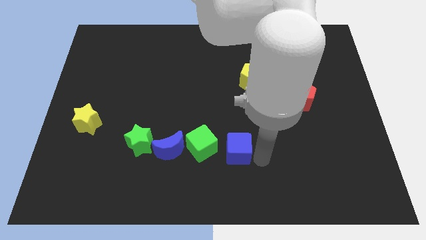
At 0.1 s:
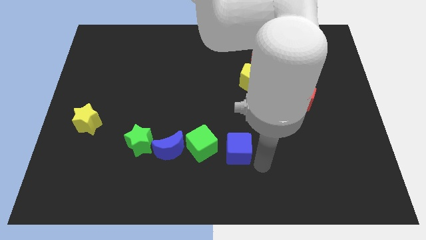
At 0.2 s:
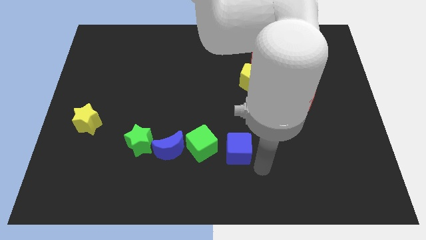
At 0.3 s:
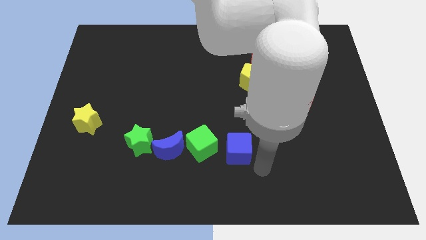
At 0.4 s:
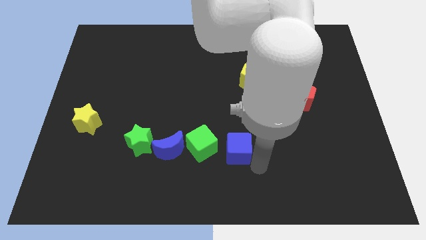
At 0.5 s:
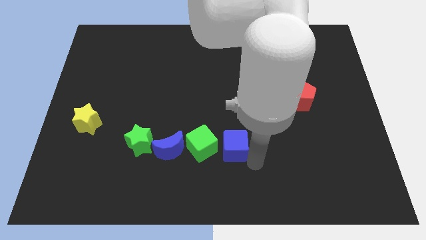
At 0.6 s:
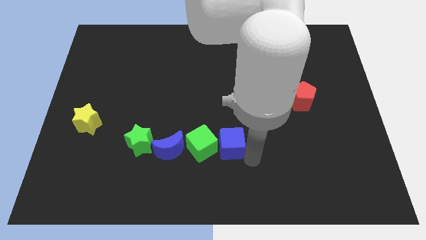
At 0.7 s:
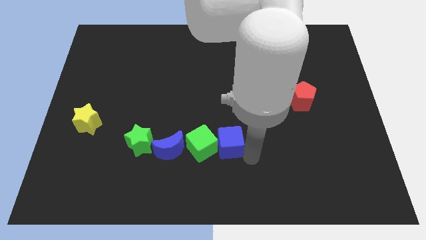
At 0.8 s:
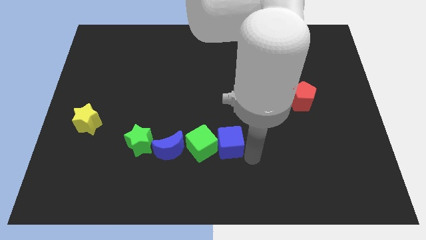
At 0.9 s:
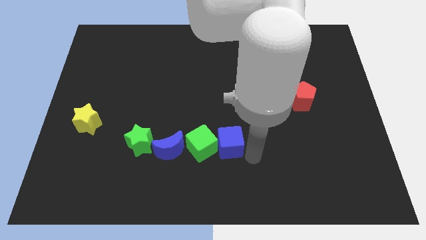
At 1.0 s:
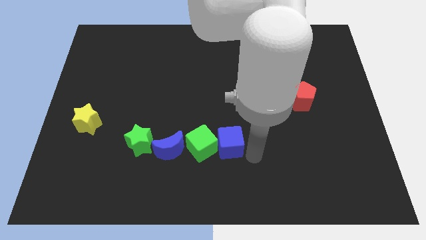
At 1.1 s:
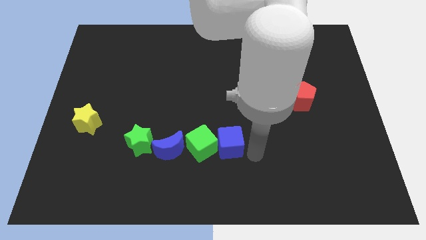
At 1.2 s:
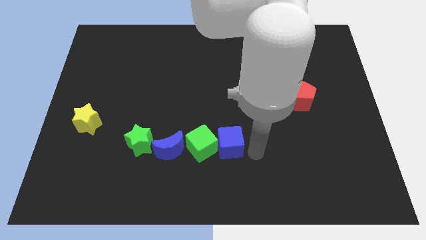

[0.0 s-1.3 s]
push blue cube into green cube

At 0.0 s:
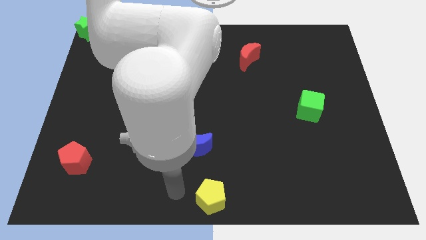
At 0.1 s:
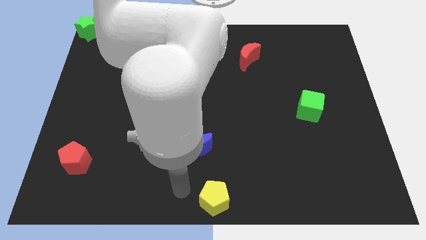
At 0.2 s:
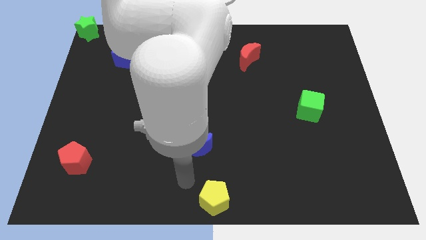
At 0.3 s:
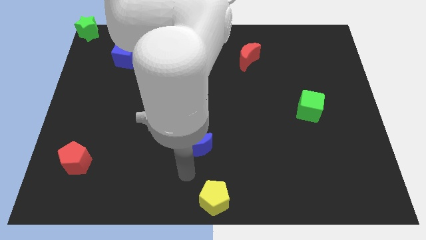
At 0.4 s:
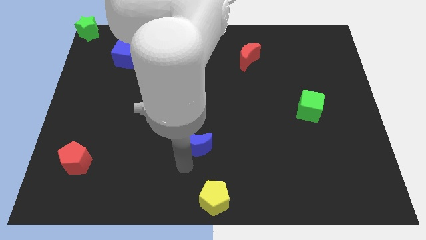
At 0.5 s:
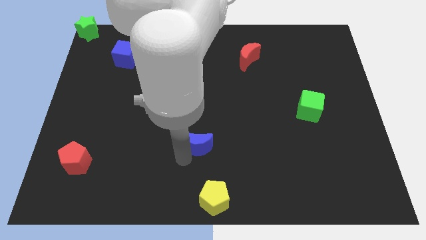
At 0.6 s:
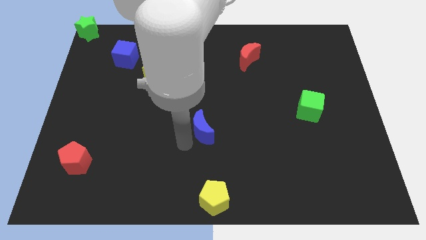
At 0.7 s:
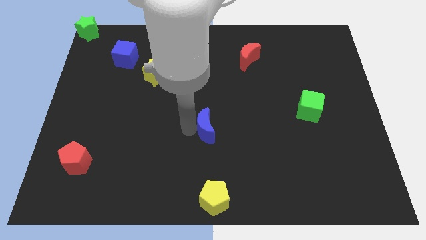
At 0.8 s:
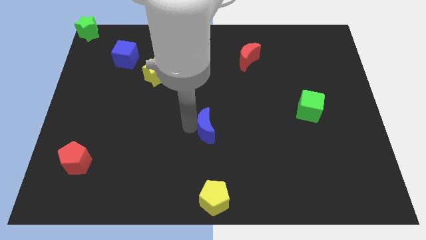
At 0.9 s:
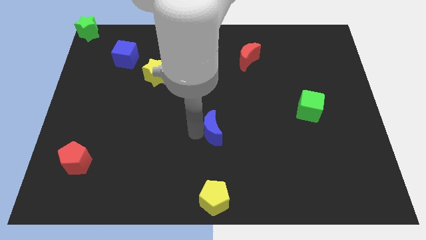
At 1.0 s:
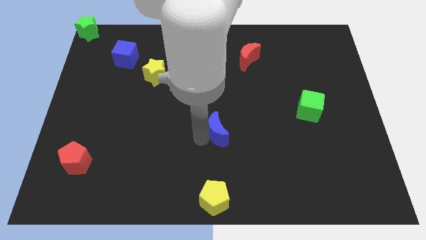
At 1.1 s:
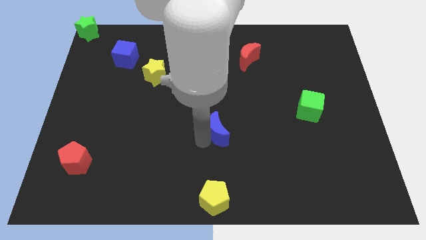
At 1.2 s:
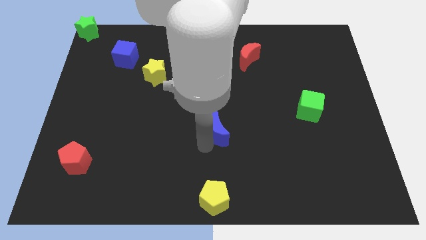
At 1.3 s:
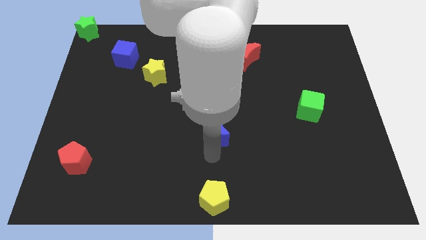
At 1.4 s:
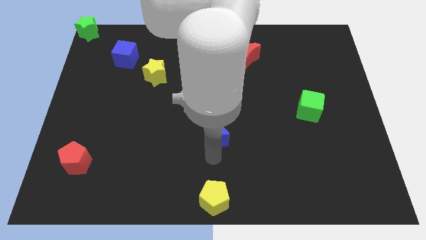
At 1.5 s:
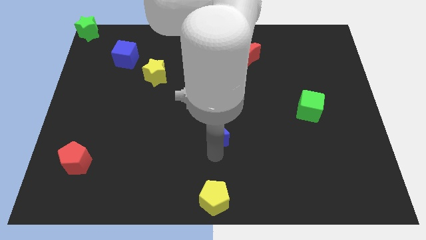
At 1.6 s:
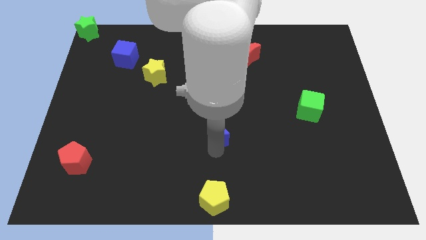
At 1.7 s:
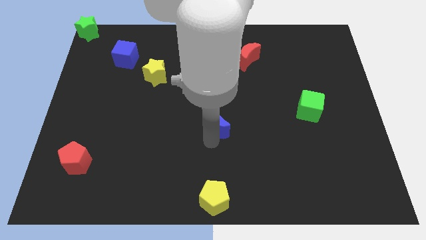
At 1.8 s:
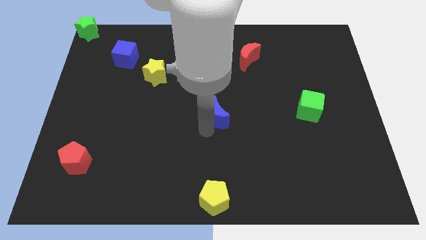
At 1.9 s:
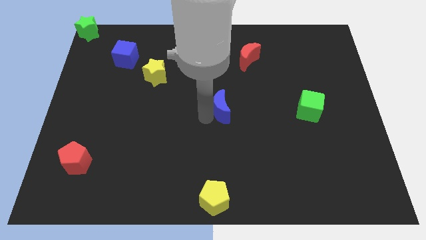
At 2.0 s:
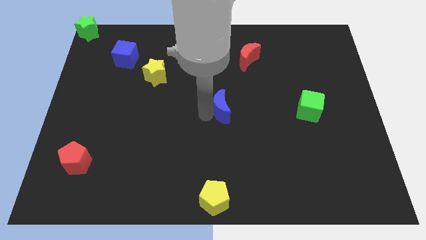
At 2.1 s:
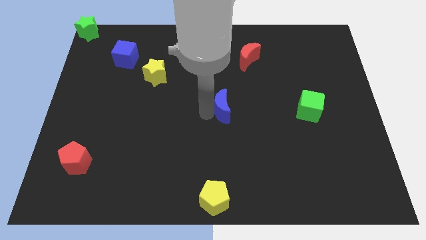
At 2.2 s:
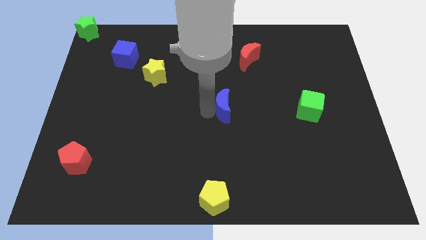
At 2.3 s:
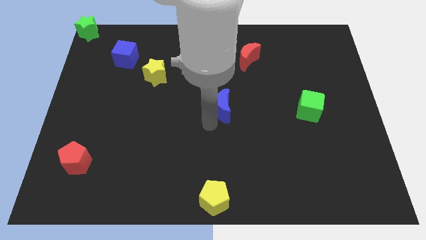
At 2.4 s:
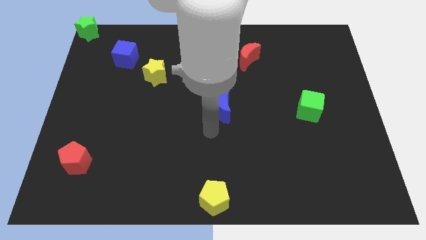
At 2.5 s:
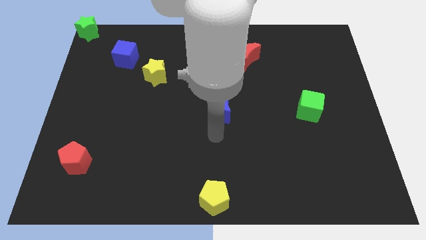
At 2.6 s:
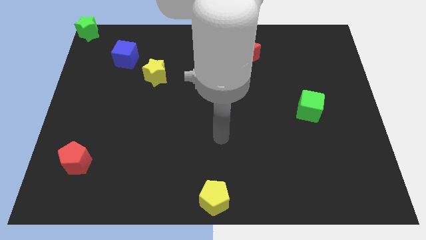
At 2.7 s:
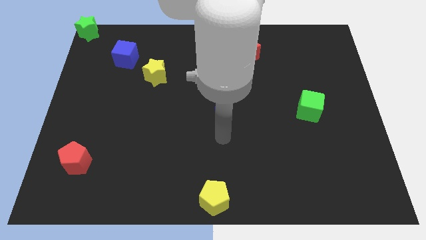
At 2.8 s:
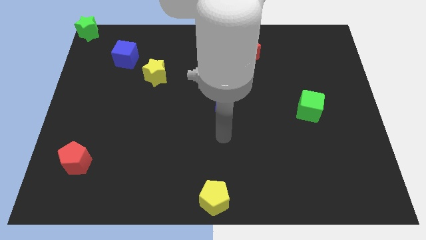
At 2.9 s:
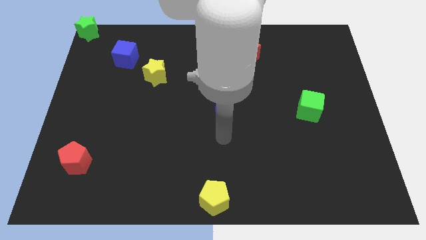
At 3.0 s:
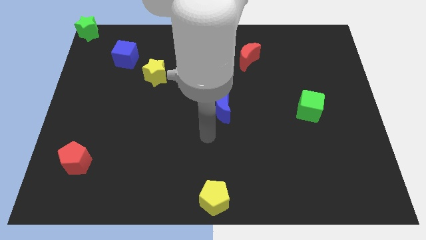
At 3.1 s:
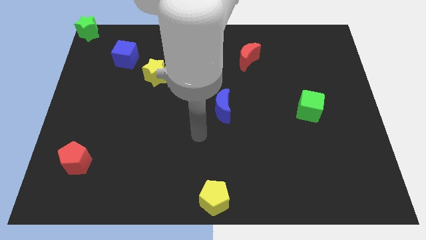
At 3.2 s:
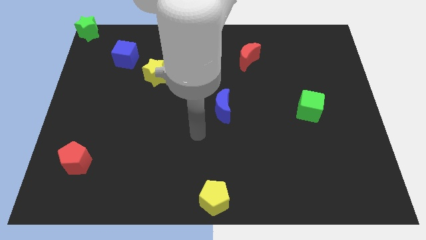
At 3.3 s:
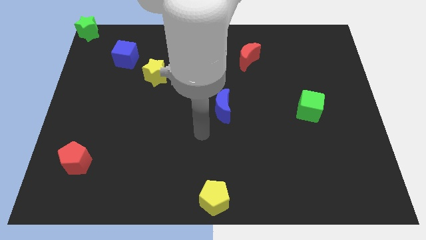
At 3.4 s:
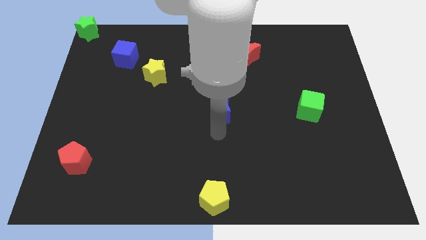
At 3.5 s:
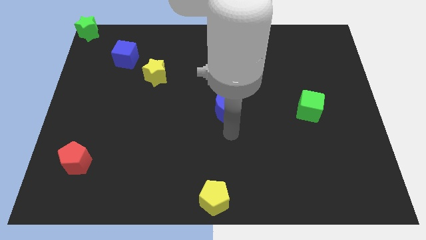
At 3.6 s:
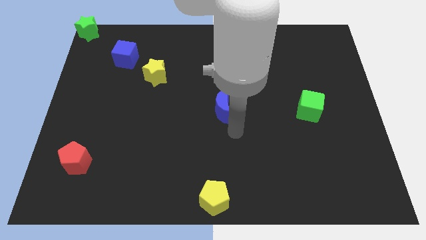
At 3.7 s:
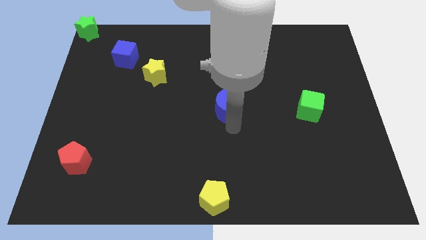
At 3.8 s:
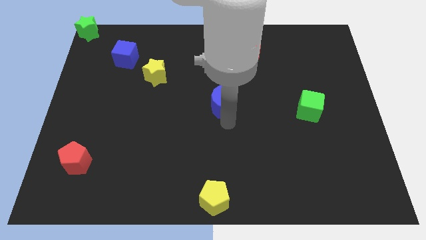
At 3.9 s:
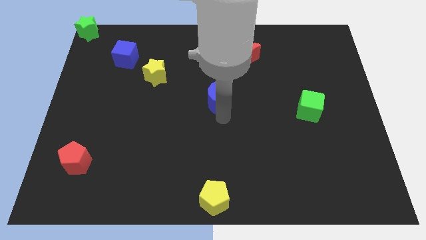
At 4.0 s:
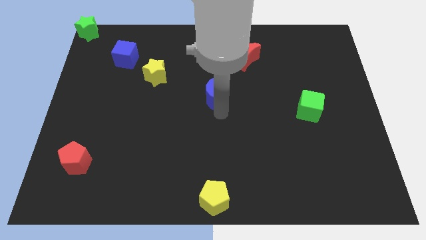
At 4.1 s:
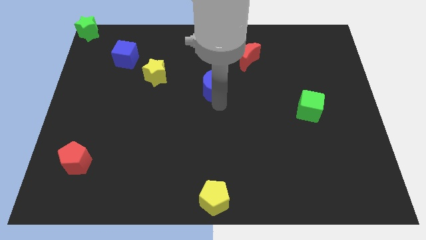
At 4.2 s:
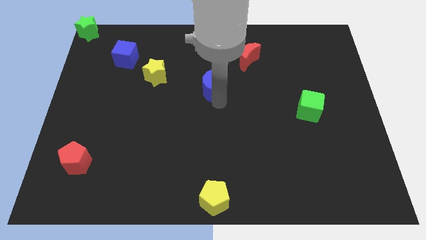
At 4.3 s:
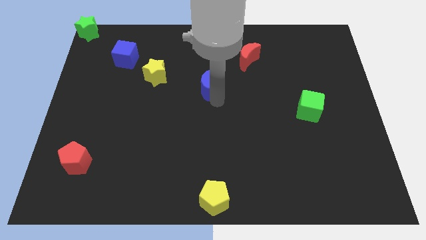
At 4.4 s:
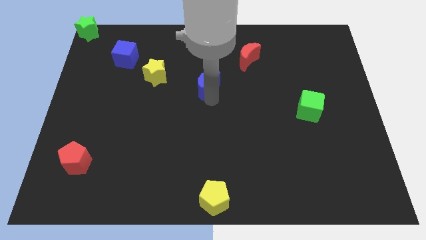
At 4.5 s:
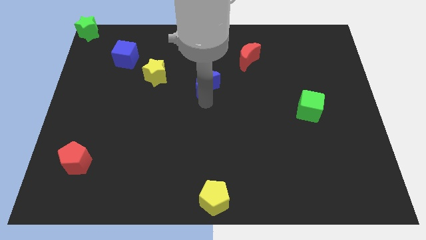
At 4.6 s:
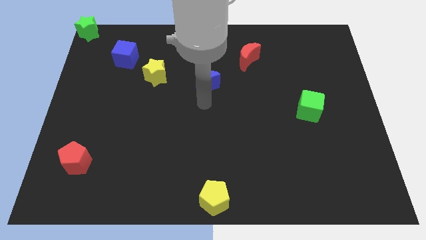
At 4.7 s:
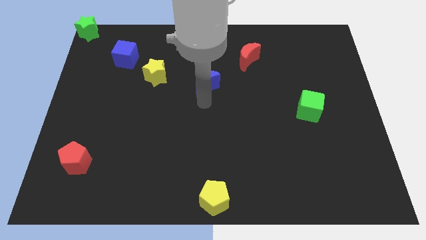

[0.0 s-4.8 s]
put the blue crescent to the right of the yellow star

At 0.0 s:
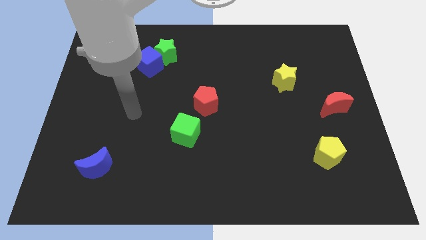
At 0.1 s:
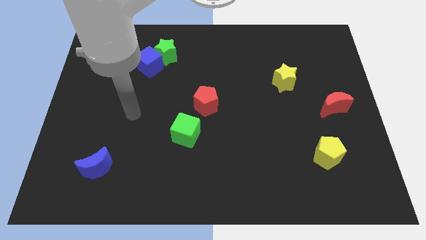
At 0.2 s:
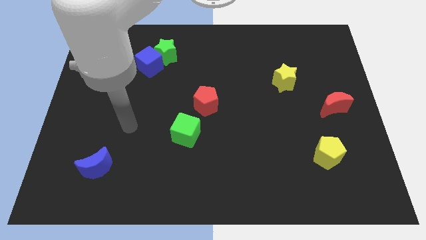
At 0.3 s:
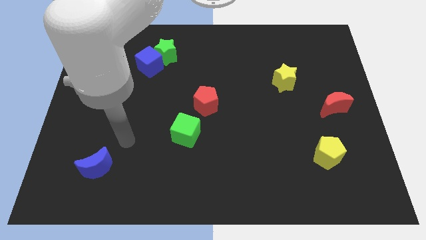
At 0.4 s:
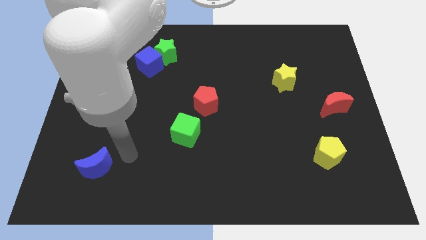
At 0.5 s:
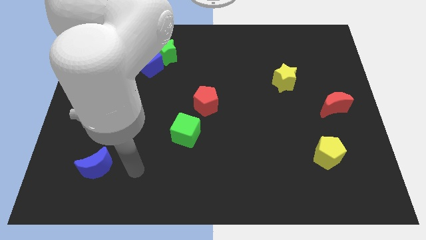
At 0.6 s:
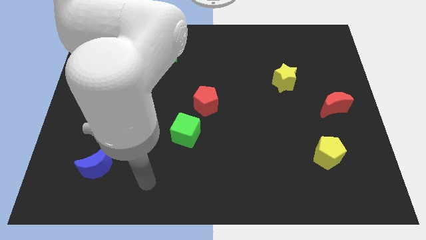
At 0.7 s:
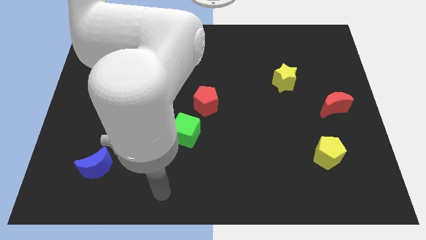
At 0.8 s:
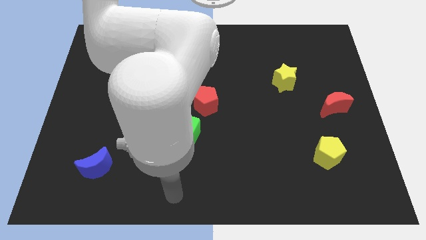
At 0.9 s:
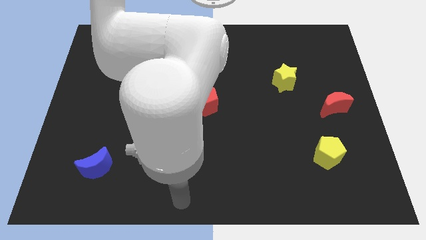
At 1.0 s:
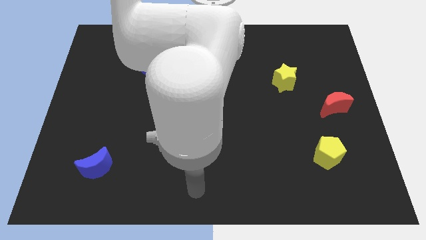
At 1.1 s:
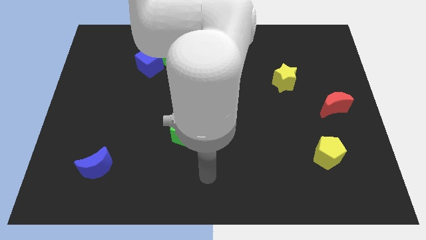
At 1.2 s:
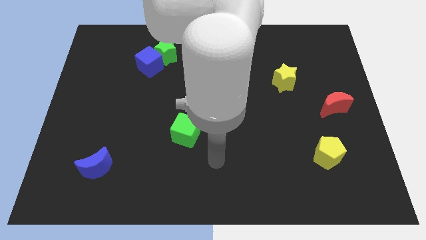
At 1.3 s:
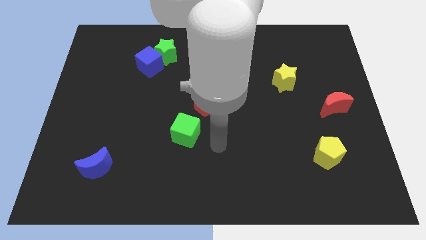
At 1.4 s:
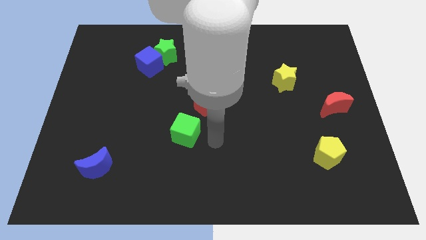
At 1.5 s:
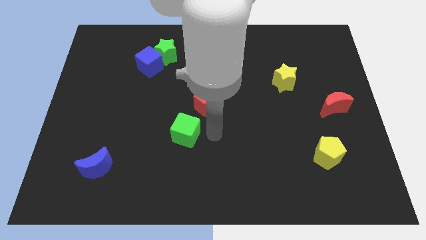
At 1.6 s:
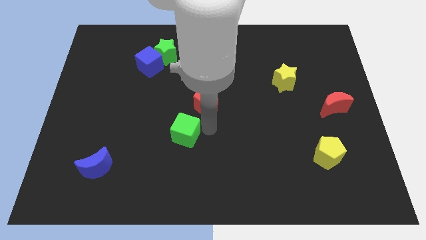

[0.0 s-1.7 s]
point your hand at the right side of the green cube

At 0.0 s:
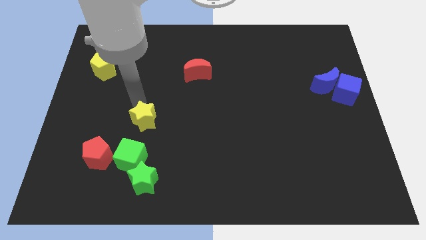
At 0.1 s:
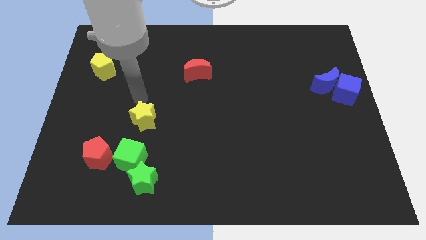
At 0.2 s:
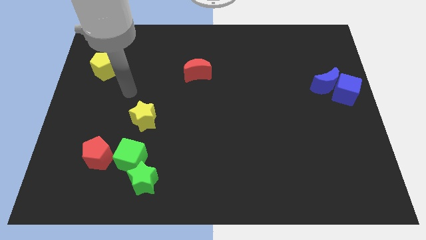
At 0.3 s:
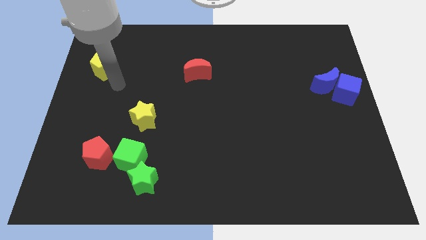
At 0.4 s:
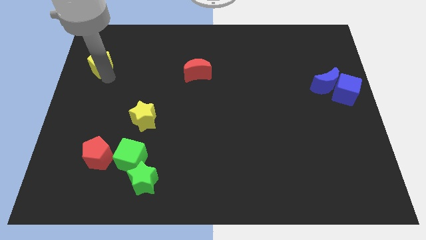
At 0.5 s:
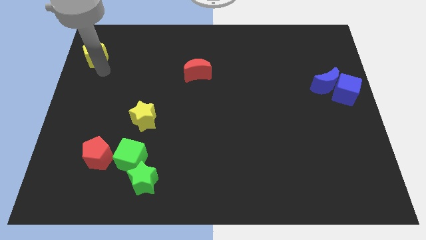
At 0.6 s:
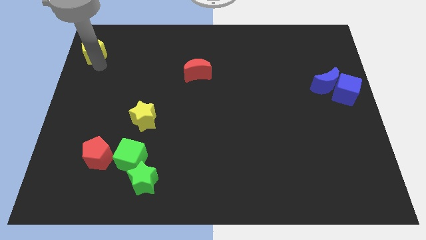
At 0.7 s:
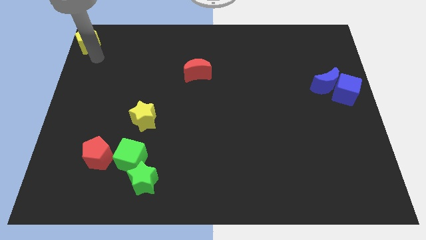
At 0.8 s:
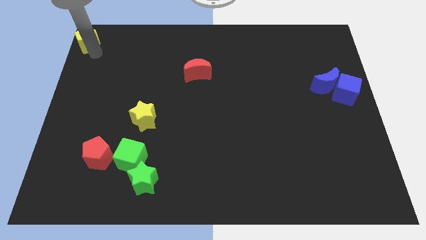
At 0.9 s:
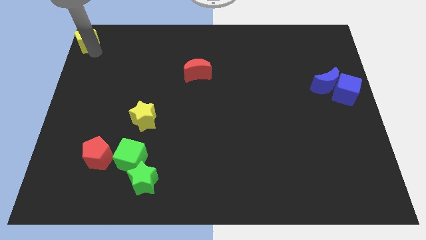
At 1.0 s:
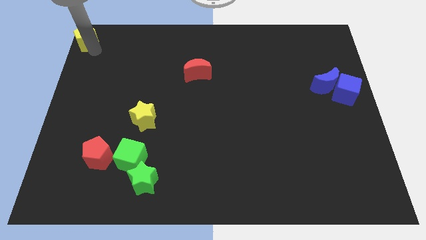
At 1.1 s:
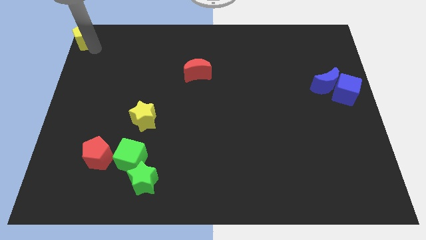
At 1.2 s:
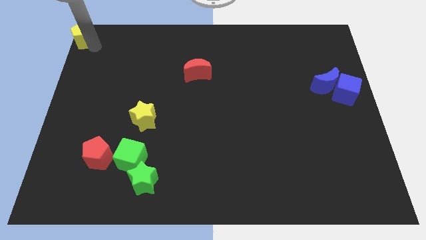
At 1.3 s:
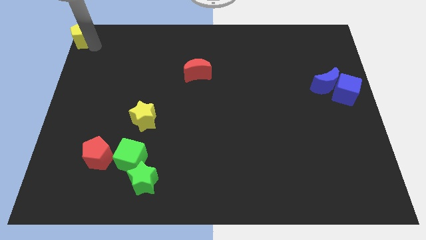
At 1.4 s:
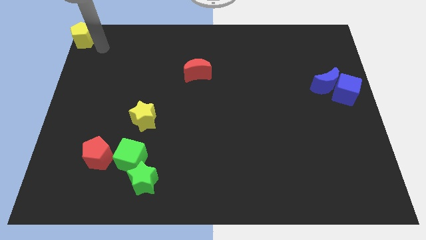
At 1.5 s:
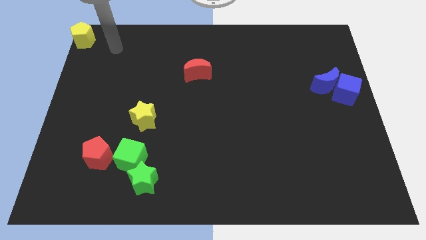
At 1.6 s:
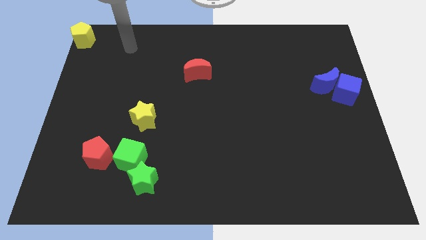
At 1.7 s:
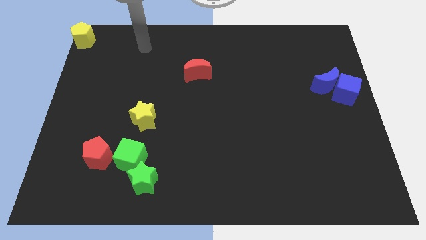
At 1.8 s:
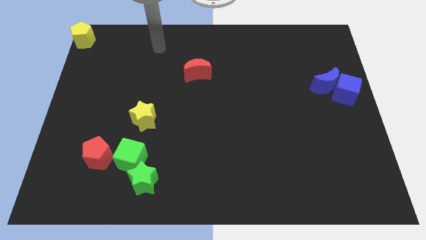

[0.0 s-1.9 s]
place the yellow pentagon at the top left corner
